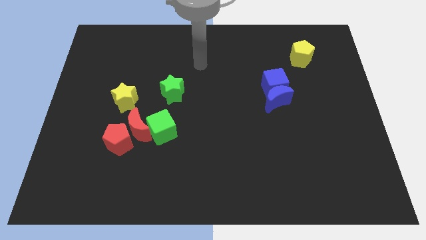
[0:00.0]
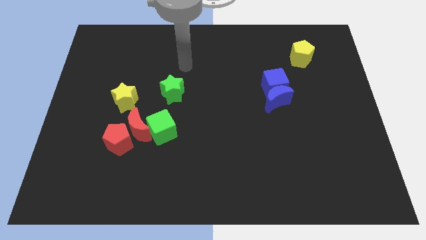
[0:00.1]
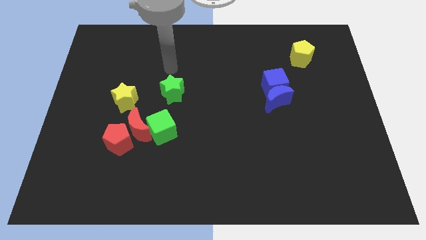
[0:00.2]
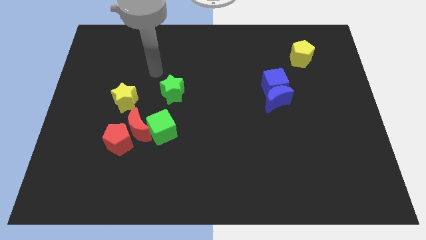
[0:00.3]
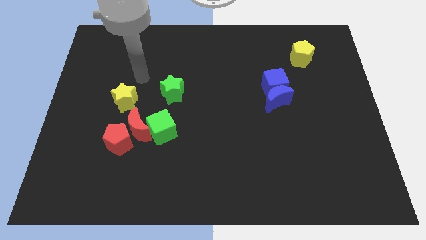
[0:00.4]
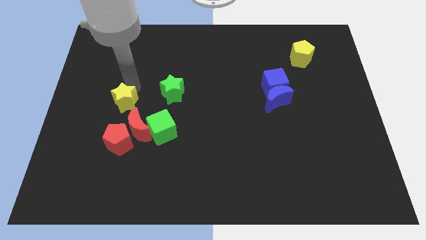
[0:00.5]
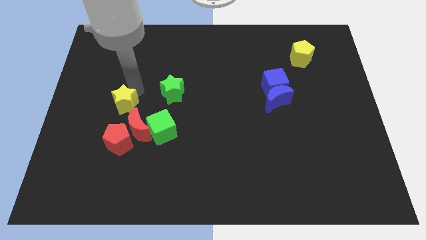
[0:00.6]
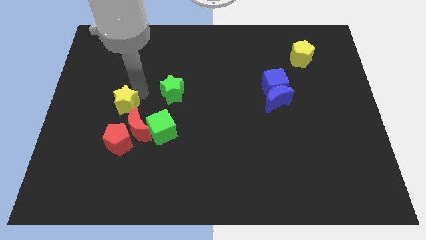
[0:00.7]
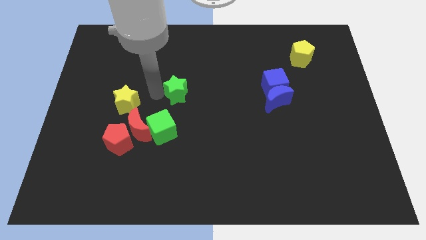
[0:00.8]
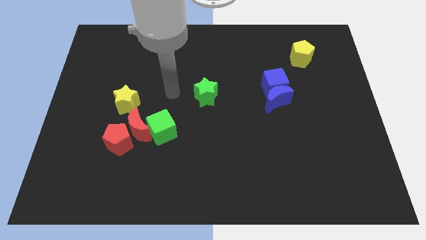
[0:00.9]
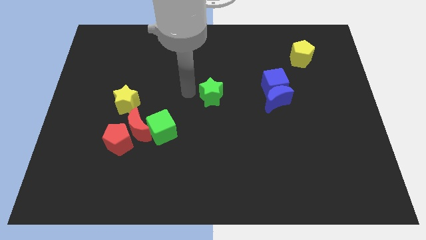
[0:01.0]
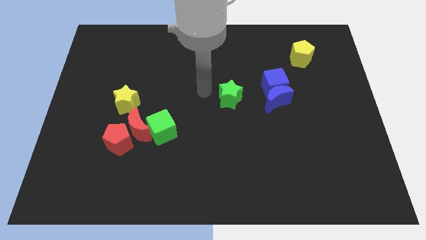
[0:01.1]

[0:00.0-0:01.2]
place the green star at the center of the board

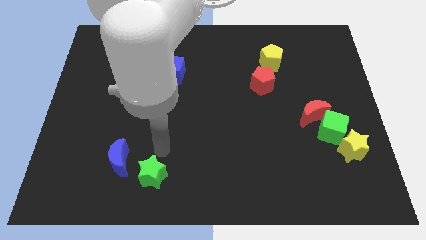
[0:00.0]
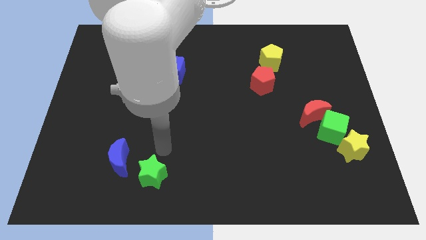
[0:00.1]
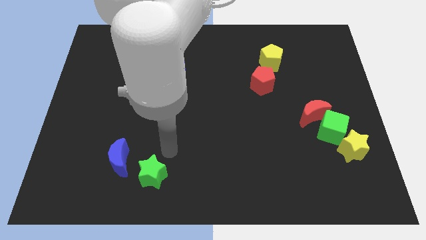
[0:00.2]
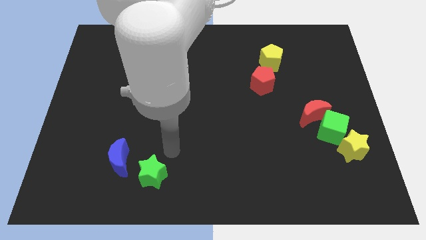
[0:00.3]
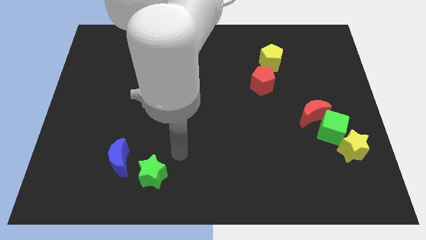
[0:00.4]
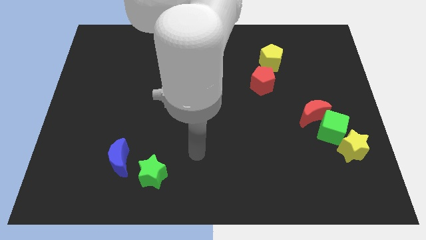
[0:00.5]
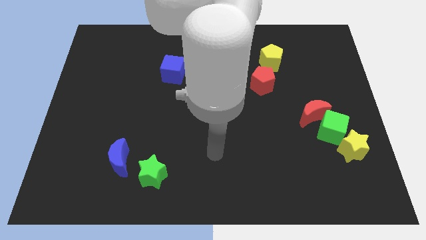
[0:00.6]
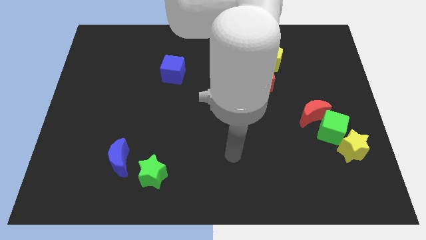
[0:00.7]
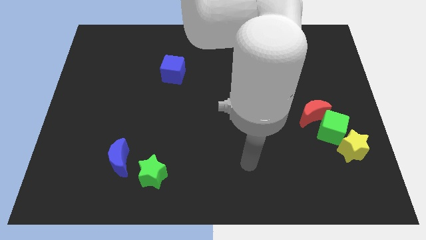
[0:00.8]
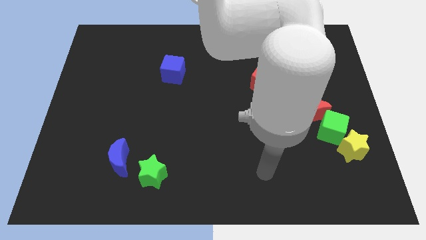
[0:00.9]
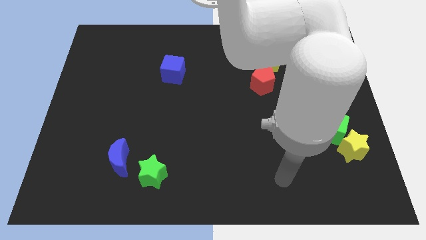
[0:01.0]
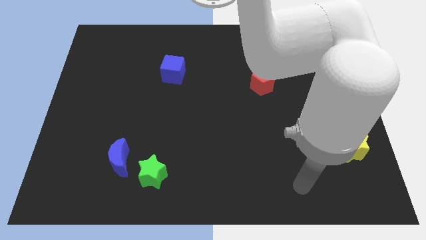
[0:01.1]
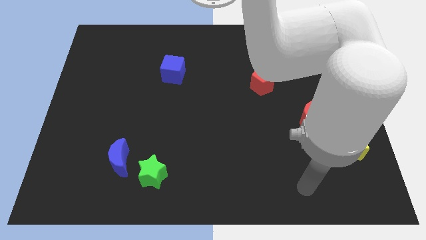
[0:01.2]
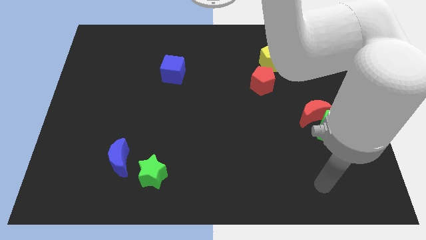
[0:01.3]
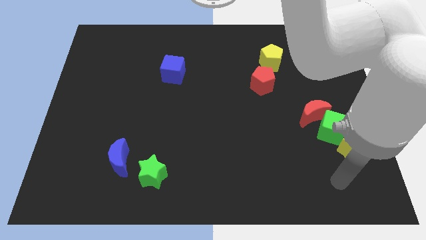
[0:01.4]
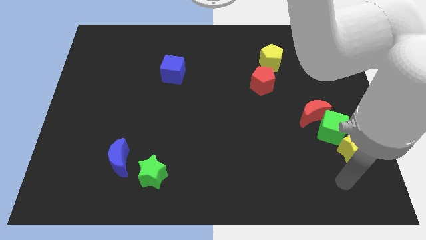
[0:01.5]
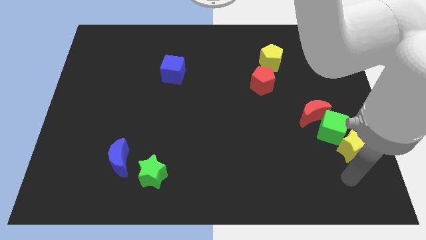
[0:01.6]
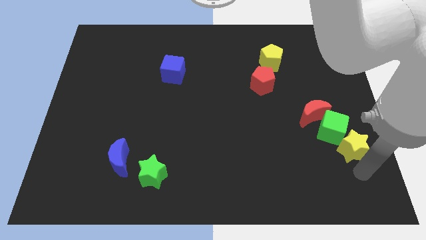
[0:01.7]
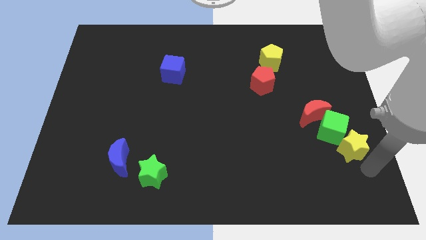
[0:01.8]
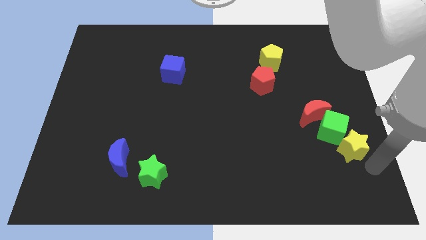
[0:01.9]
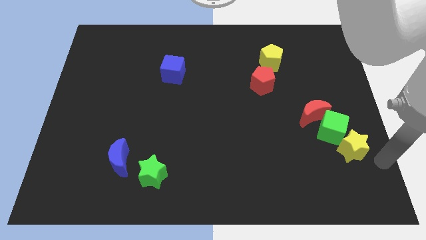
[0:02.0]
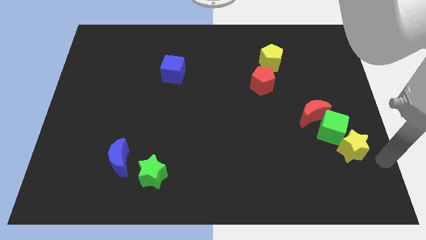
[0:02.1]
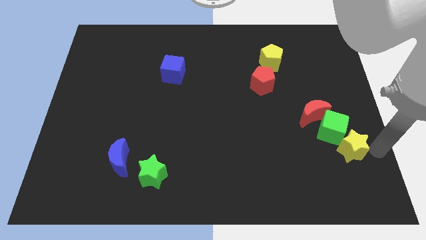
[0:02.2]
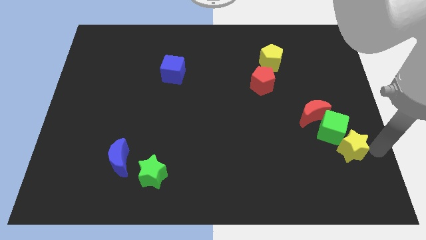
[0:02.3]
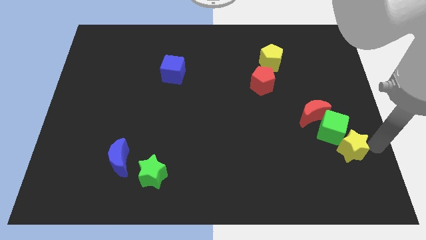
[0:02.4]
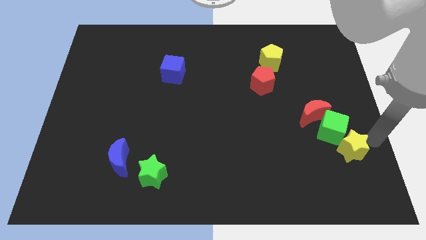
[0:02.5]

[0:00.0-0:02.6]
point your hand at the right side of the yellow star

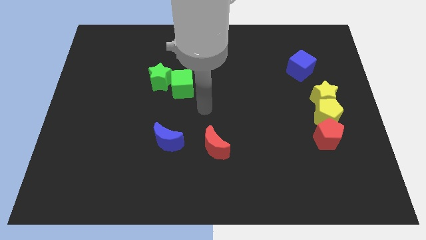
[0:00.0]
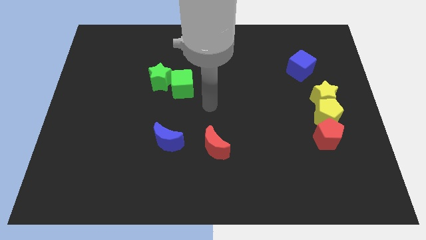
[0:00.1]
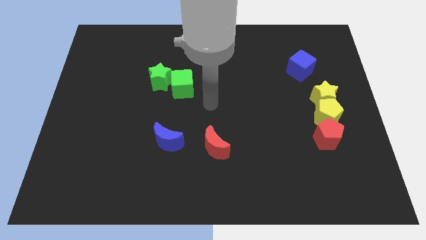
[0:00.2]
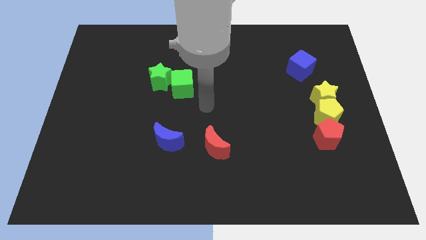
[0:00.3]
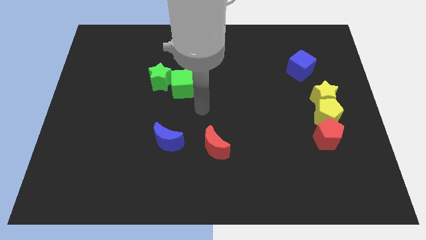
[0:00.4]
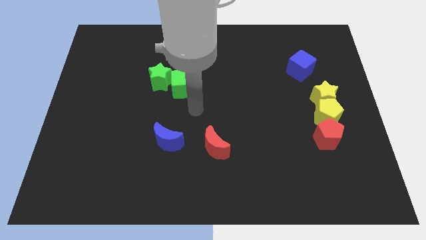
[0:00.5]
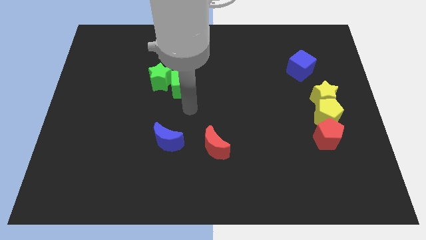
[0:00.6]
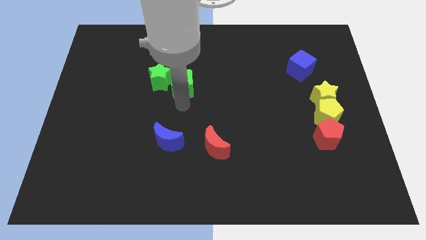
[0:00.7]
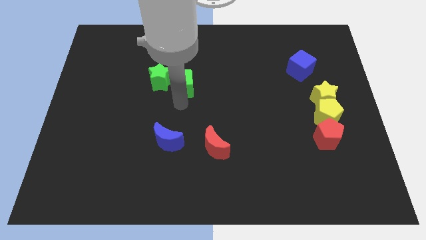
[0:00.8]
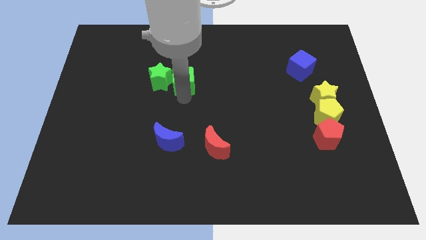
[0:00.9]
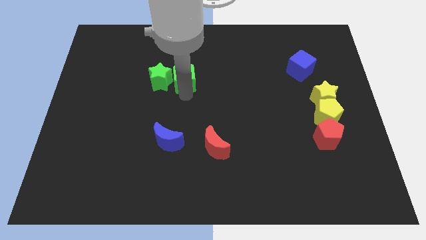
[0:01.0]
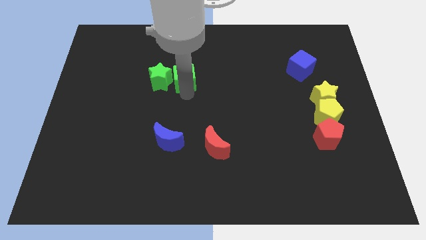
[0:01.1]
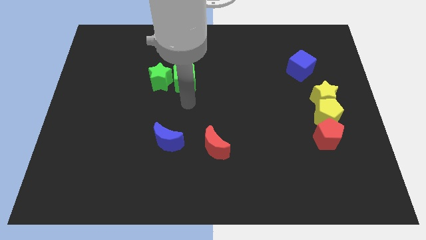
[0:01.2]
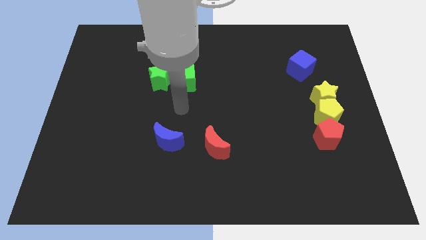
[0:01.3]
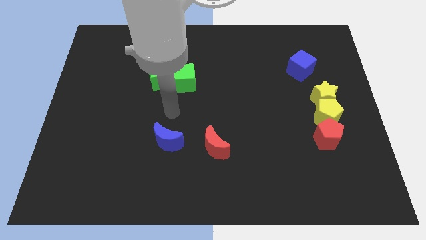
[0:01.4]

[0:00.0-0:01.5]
move the green cube slightly up

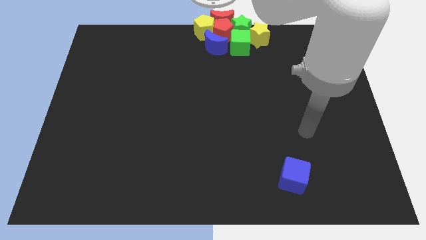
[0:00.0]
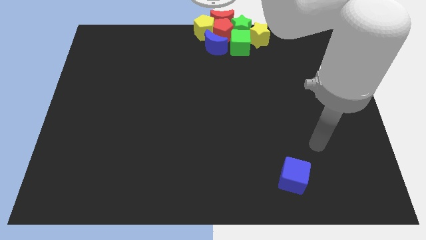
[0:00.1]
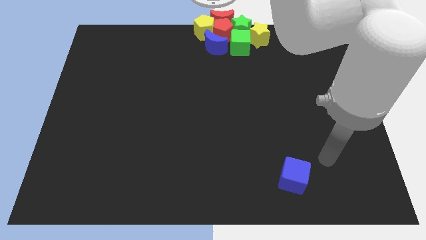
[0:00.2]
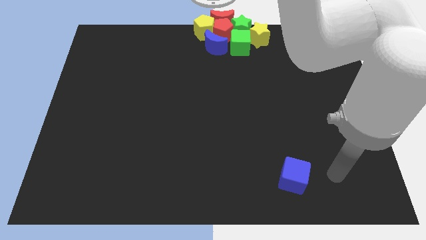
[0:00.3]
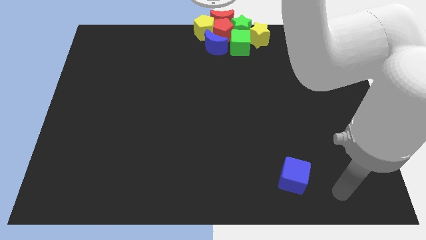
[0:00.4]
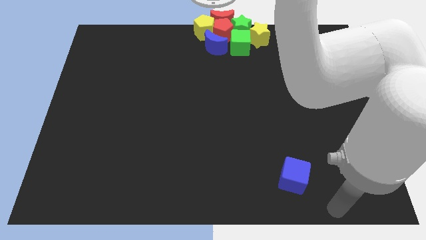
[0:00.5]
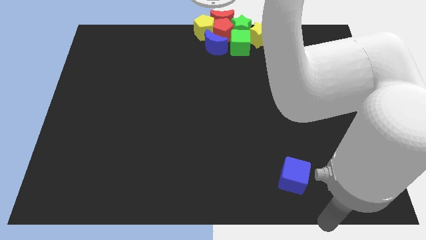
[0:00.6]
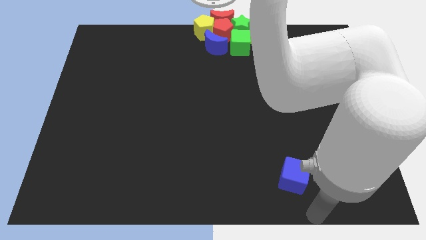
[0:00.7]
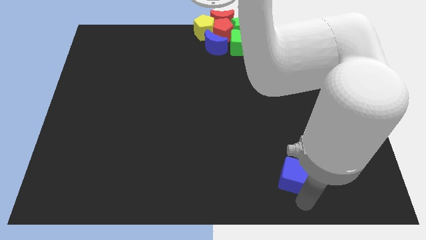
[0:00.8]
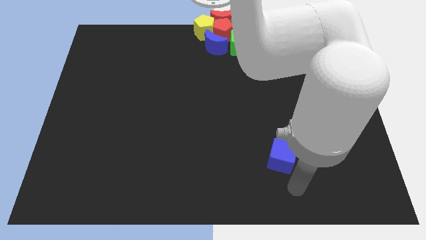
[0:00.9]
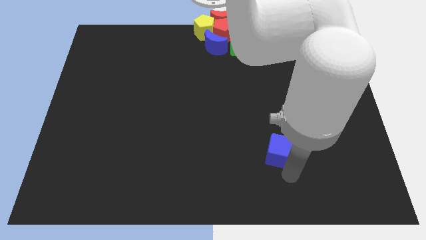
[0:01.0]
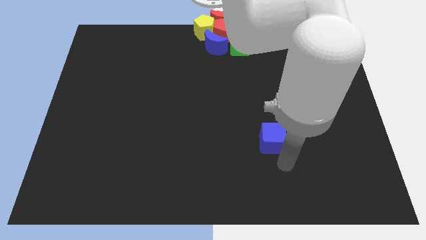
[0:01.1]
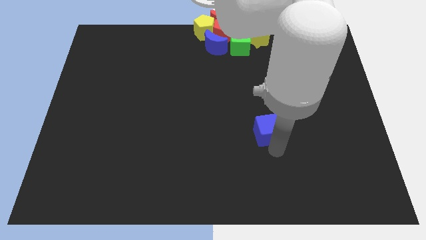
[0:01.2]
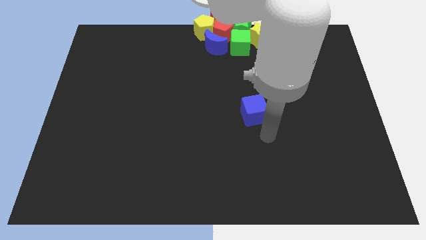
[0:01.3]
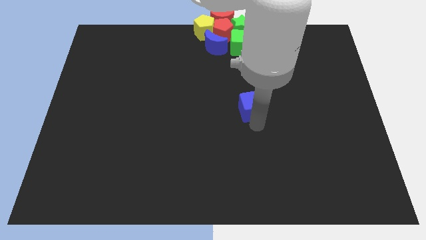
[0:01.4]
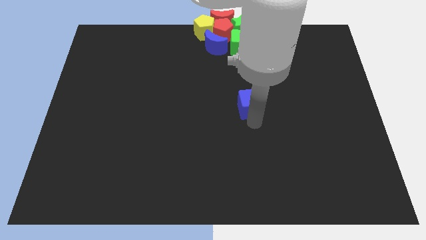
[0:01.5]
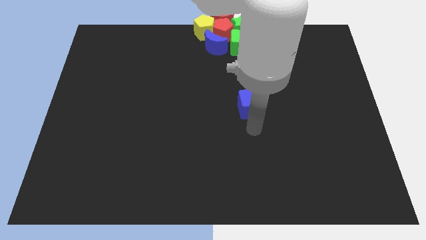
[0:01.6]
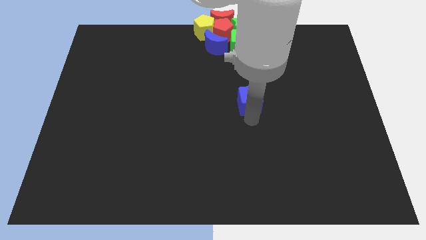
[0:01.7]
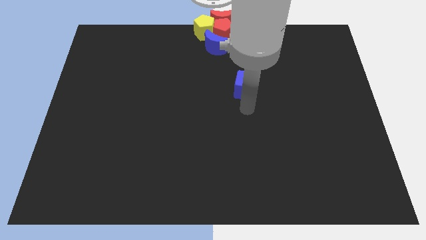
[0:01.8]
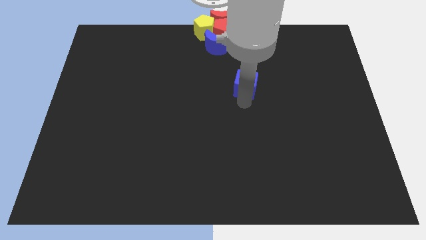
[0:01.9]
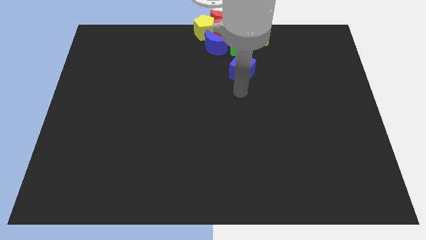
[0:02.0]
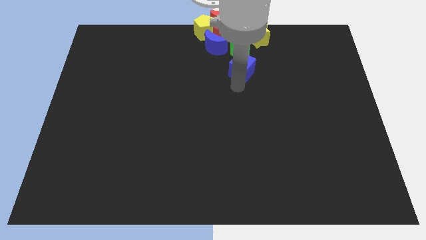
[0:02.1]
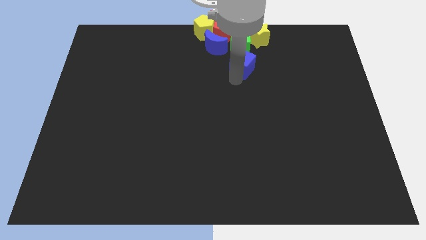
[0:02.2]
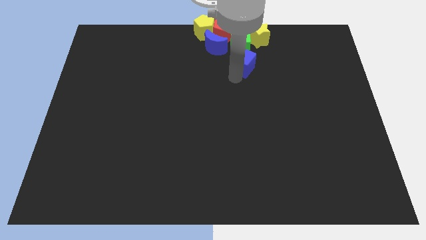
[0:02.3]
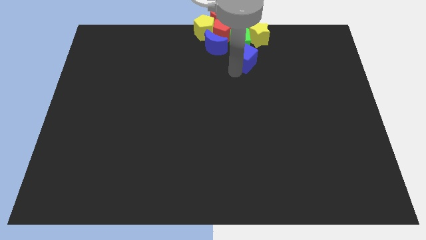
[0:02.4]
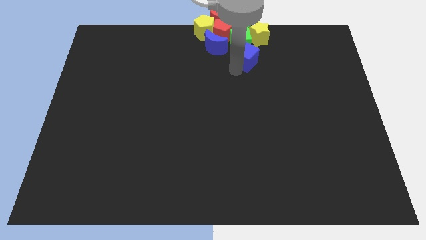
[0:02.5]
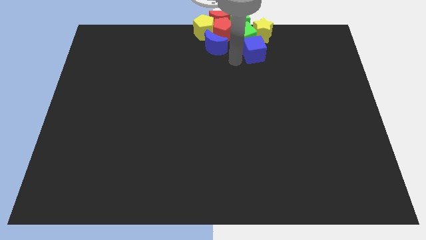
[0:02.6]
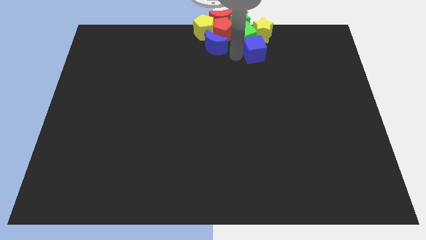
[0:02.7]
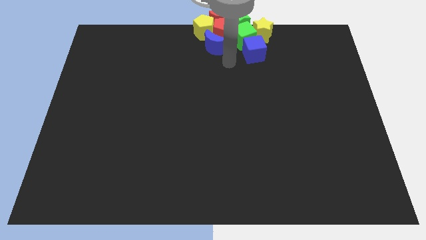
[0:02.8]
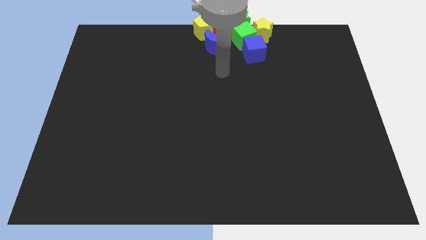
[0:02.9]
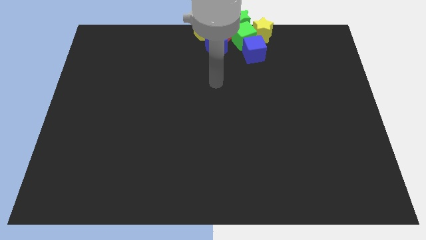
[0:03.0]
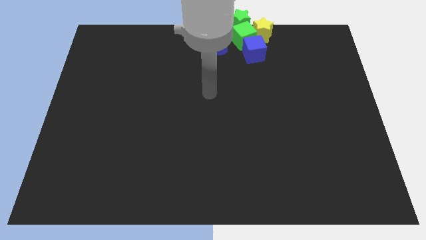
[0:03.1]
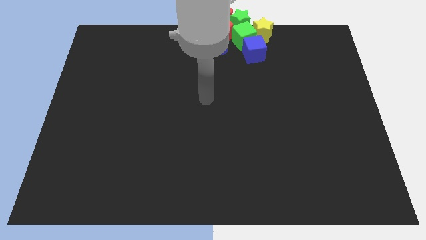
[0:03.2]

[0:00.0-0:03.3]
move the blue cube to the top center

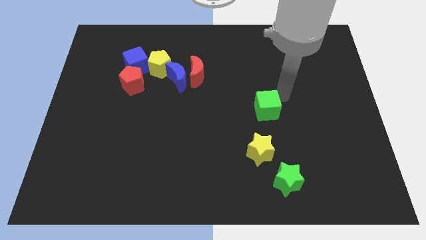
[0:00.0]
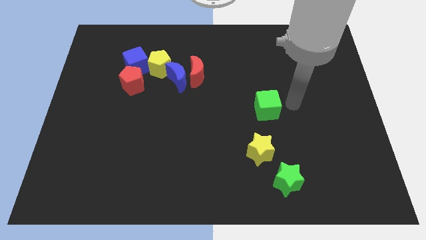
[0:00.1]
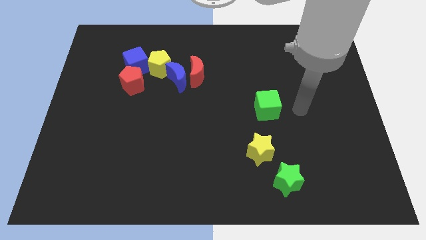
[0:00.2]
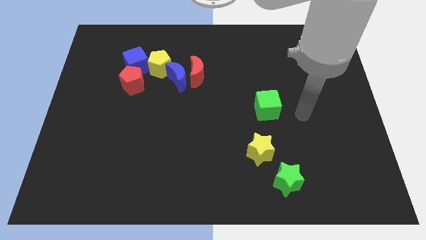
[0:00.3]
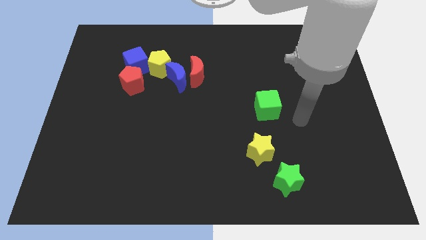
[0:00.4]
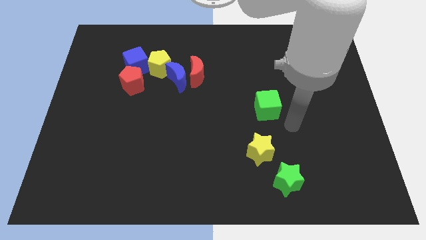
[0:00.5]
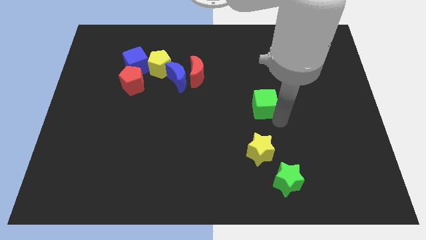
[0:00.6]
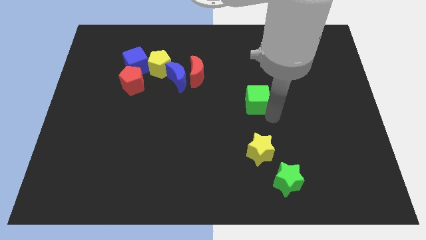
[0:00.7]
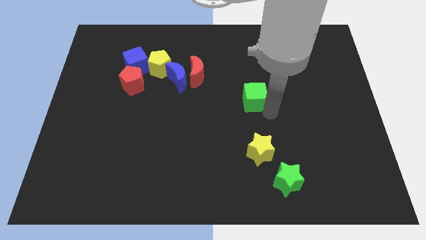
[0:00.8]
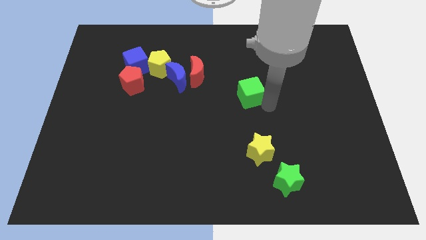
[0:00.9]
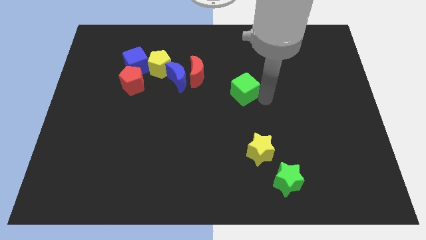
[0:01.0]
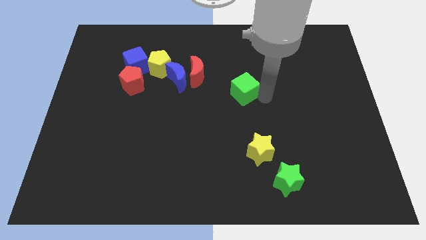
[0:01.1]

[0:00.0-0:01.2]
move the green cube to the center of the board
